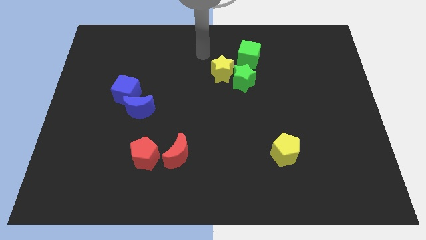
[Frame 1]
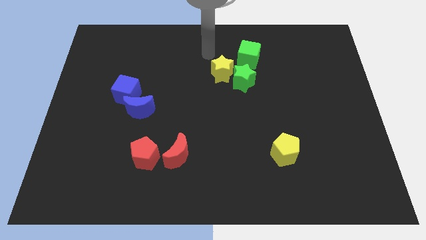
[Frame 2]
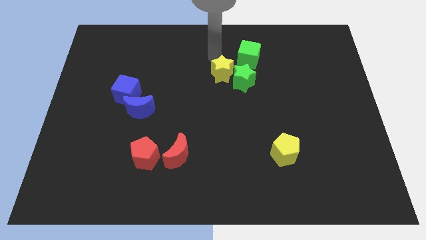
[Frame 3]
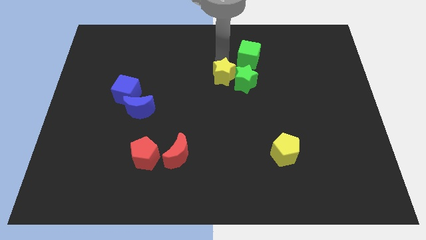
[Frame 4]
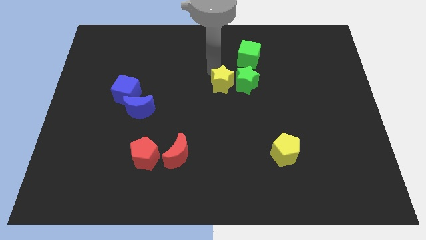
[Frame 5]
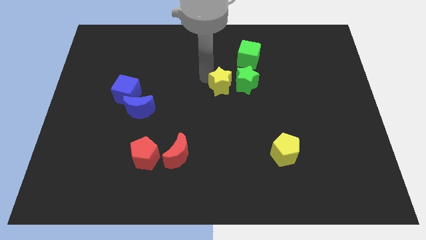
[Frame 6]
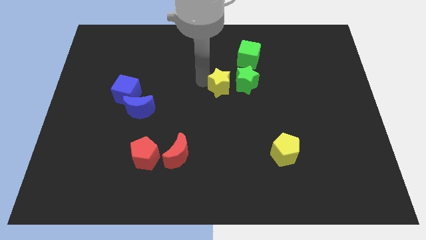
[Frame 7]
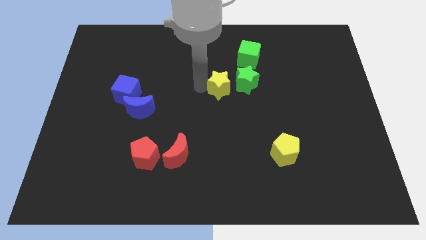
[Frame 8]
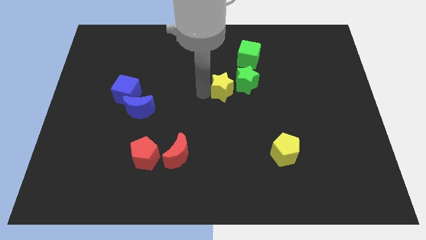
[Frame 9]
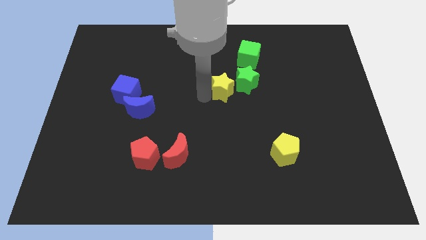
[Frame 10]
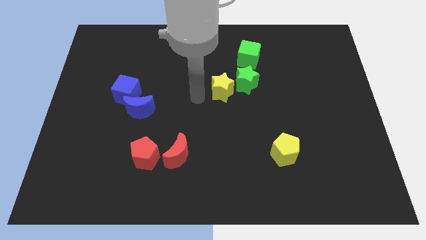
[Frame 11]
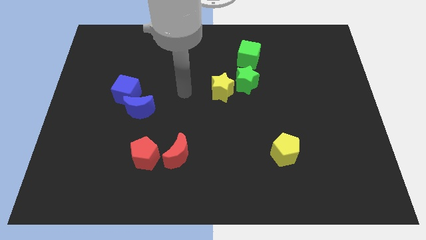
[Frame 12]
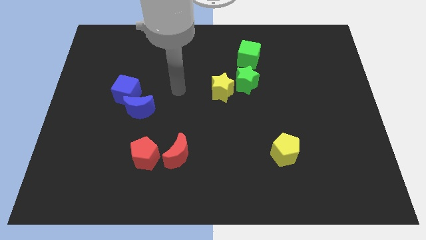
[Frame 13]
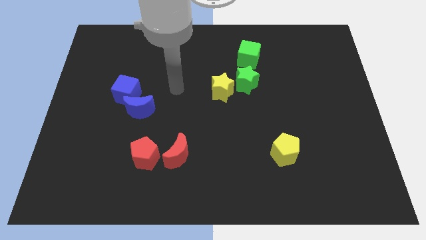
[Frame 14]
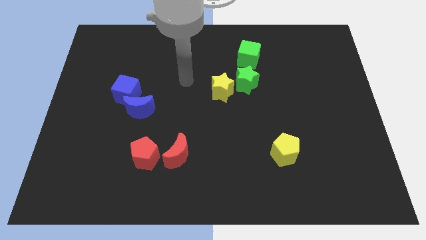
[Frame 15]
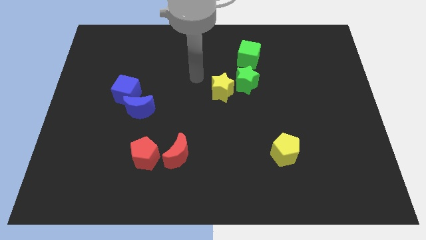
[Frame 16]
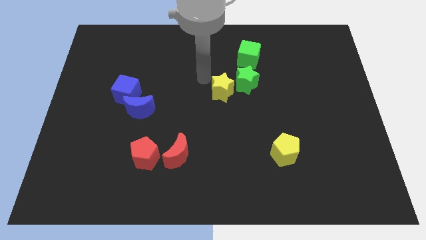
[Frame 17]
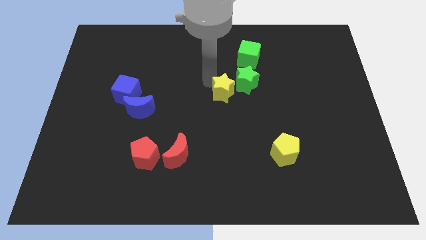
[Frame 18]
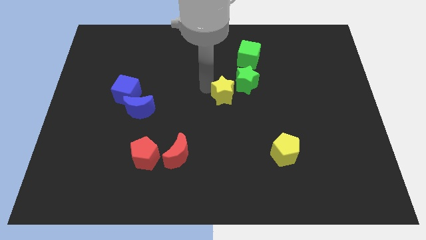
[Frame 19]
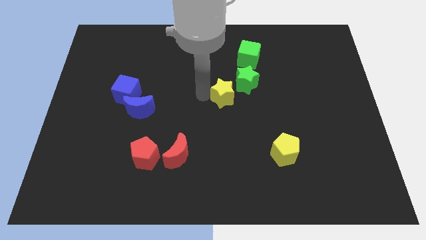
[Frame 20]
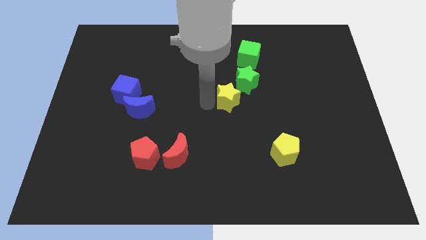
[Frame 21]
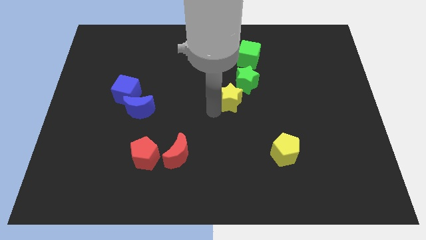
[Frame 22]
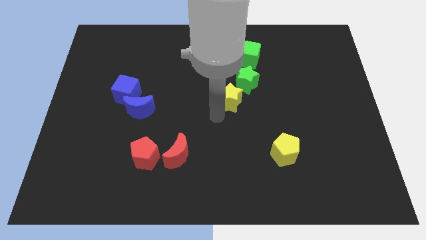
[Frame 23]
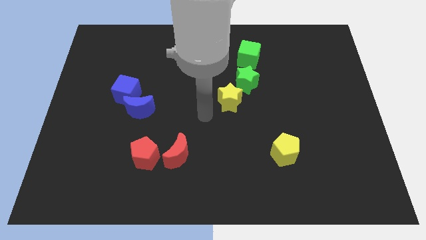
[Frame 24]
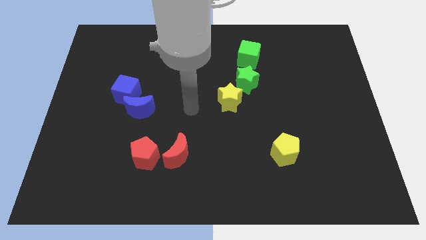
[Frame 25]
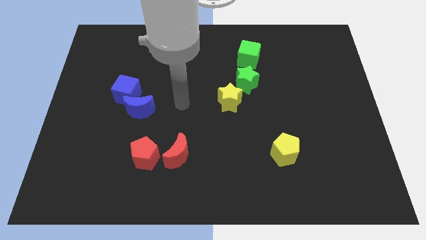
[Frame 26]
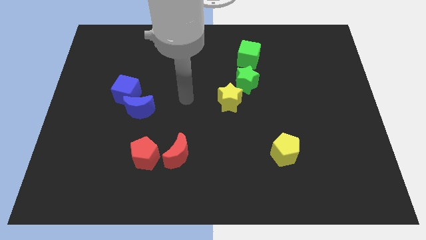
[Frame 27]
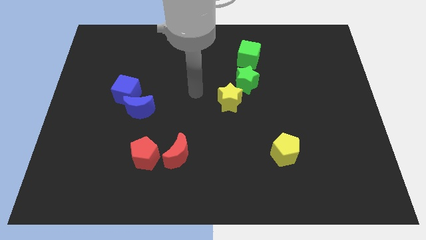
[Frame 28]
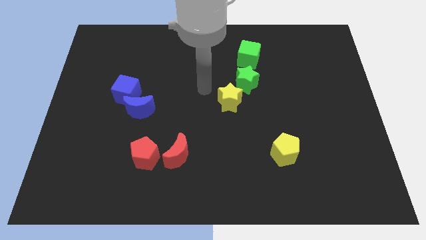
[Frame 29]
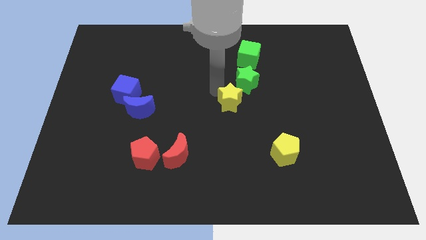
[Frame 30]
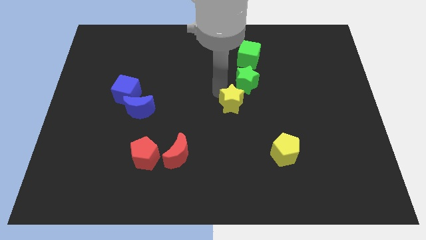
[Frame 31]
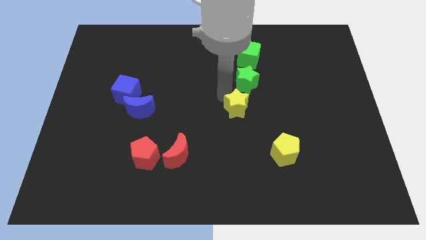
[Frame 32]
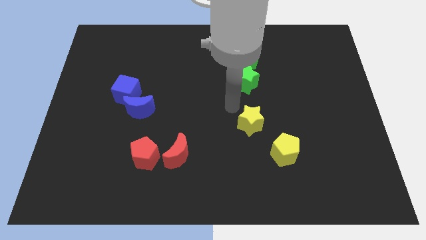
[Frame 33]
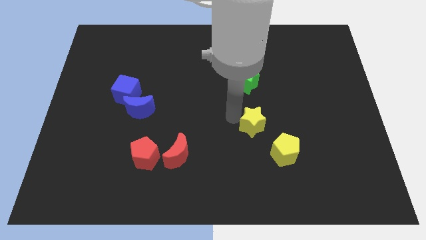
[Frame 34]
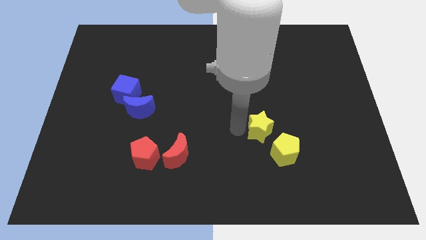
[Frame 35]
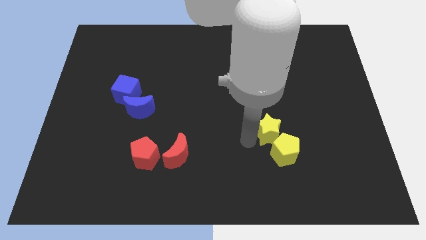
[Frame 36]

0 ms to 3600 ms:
place yellow star at the top left side of yellow pentagon

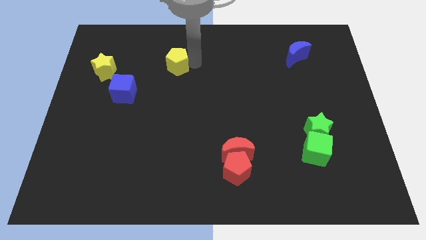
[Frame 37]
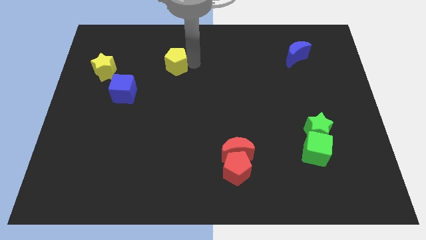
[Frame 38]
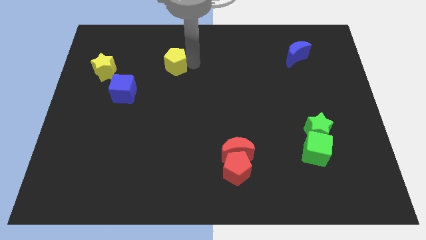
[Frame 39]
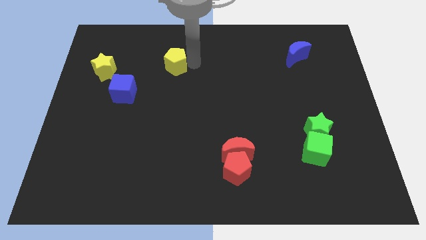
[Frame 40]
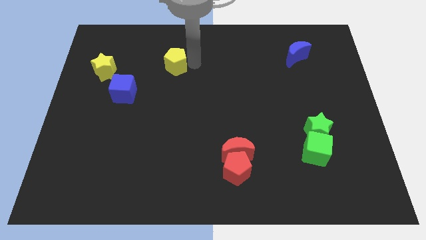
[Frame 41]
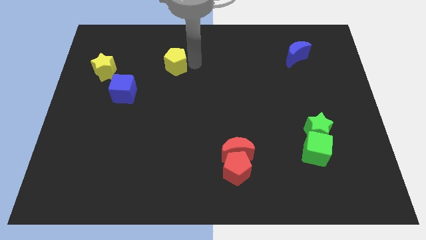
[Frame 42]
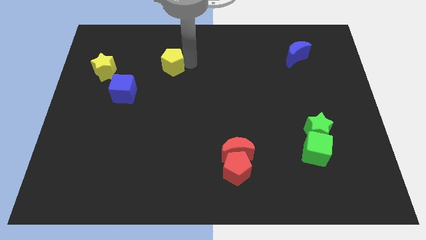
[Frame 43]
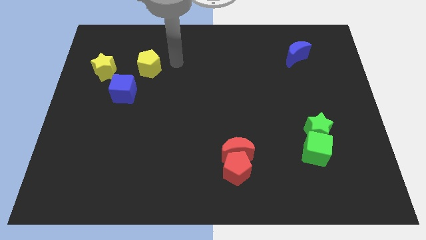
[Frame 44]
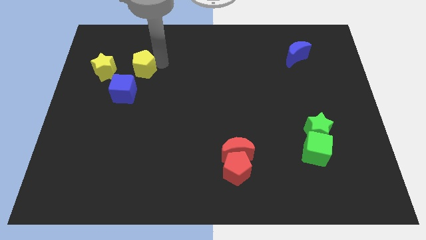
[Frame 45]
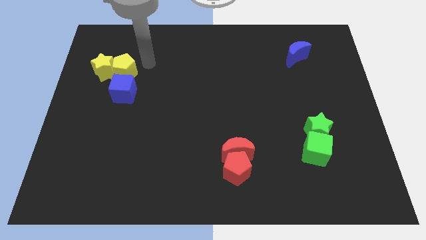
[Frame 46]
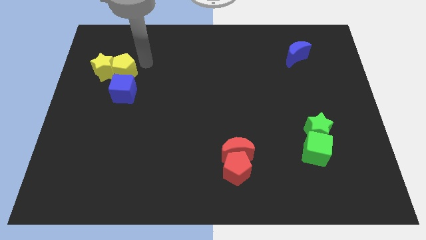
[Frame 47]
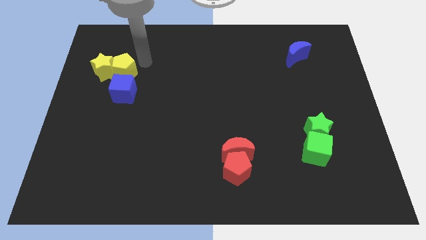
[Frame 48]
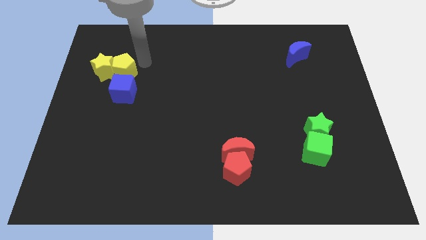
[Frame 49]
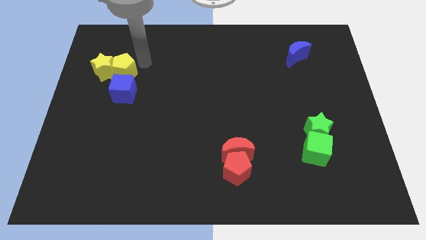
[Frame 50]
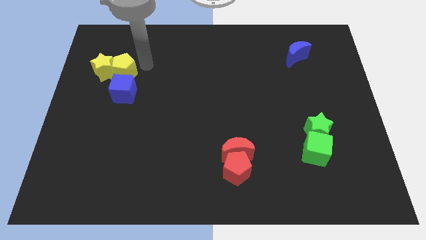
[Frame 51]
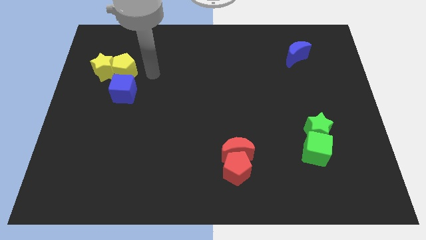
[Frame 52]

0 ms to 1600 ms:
place yellow pentagon near yellow star

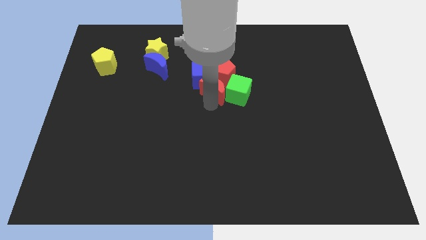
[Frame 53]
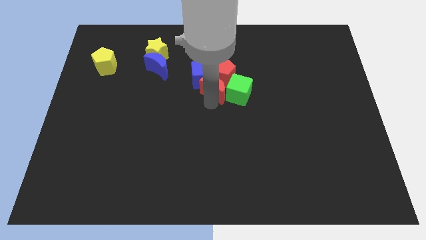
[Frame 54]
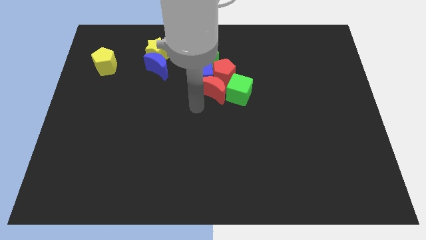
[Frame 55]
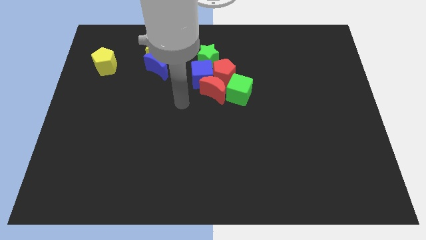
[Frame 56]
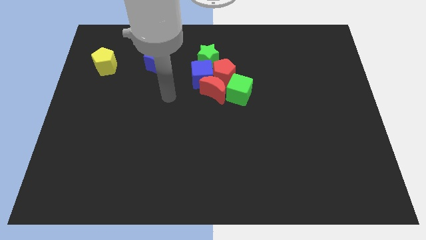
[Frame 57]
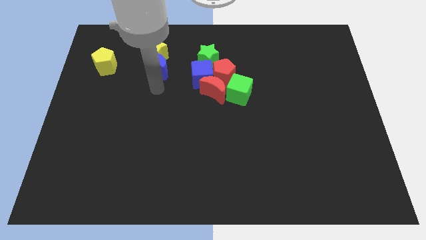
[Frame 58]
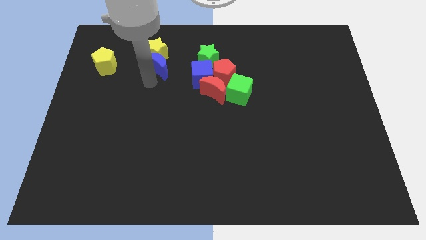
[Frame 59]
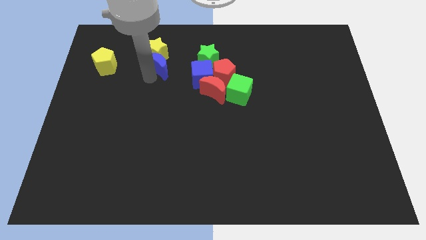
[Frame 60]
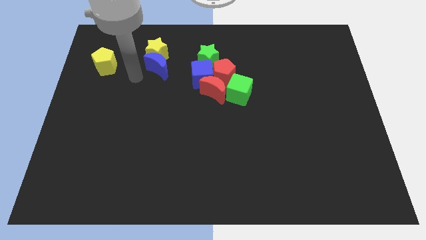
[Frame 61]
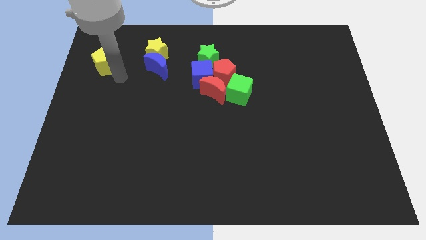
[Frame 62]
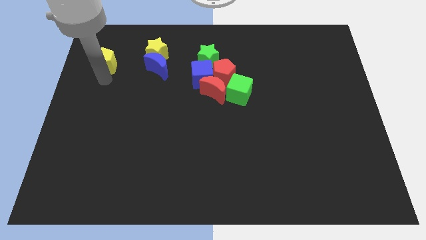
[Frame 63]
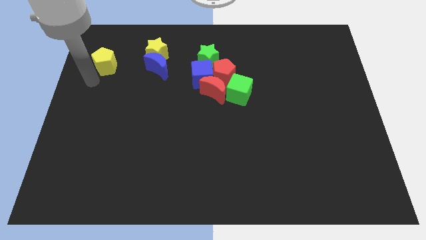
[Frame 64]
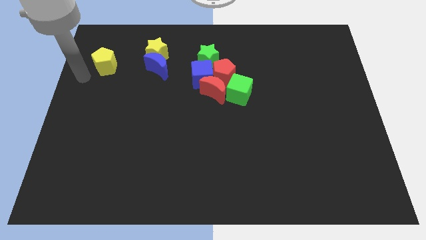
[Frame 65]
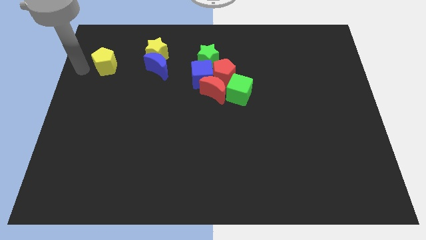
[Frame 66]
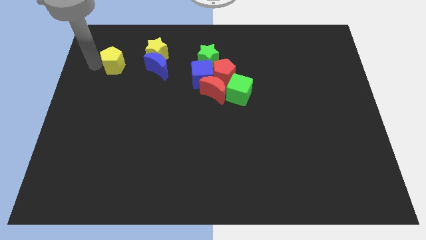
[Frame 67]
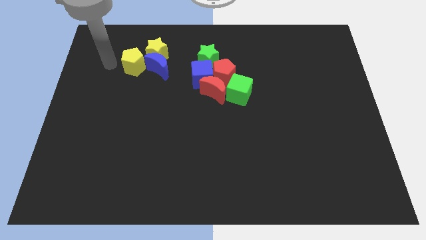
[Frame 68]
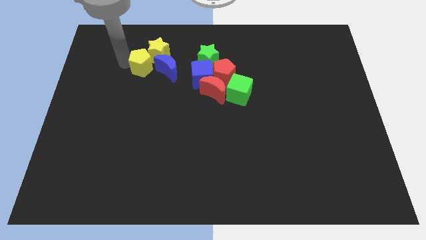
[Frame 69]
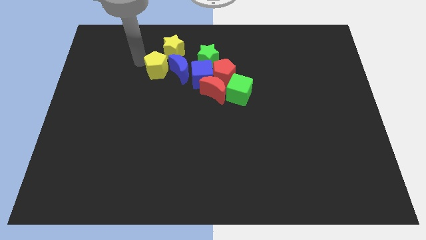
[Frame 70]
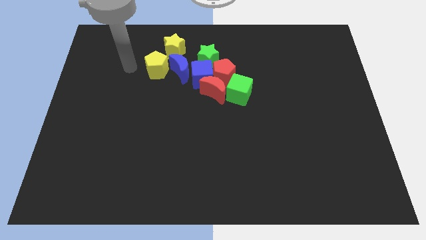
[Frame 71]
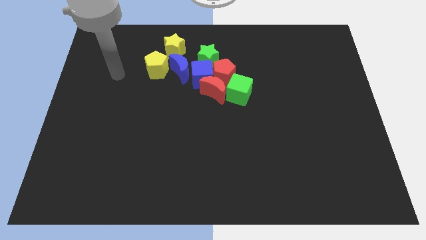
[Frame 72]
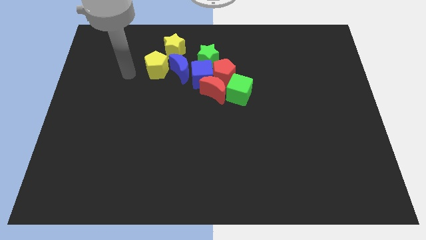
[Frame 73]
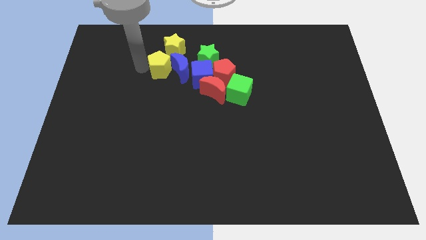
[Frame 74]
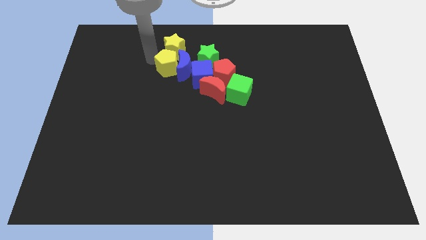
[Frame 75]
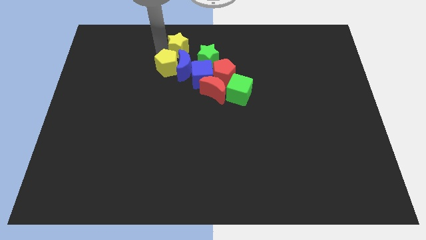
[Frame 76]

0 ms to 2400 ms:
move the yellow pentagon into the blue moon and yellow star

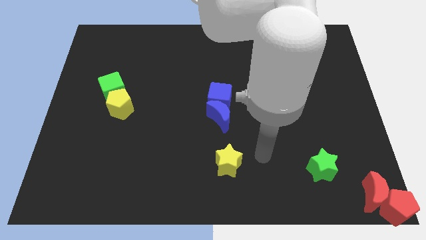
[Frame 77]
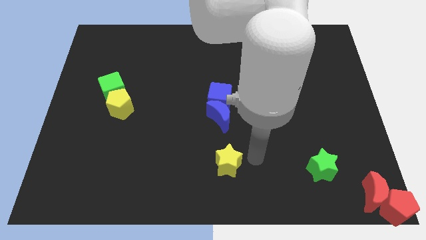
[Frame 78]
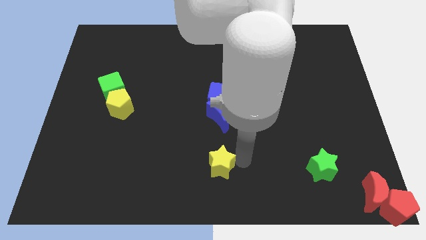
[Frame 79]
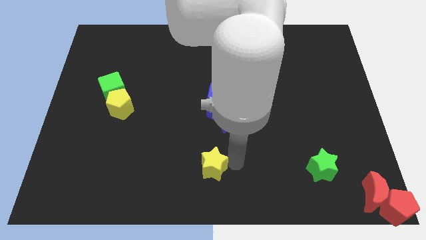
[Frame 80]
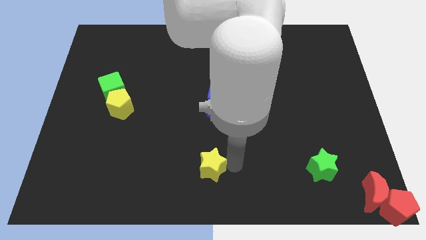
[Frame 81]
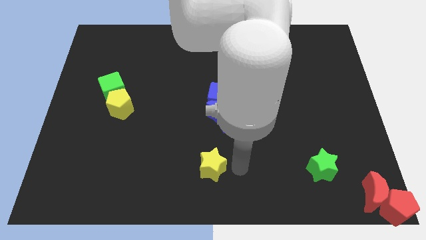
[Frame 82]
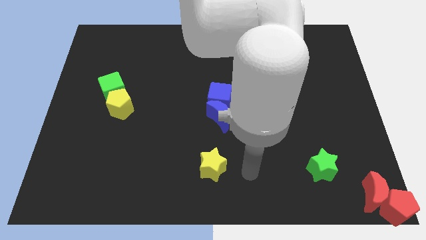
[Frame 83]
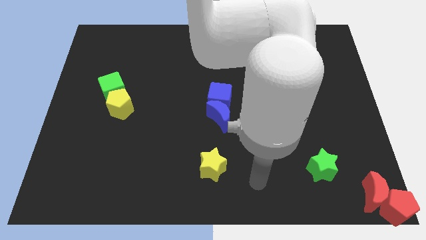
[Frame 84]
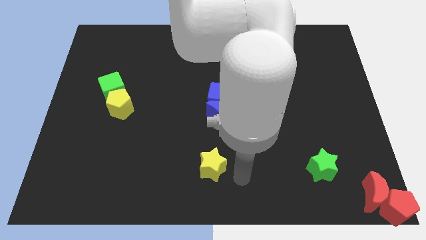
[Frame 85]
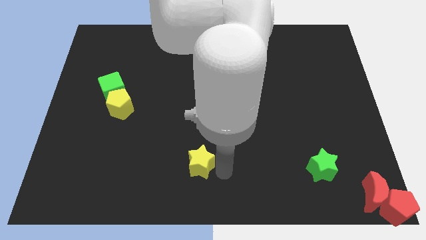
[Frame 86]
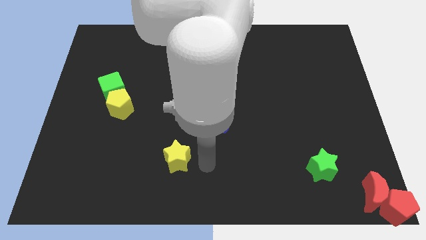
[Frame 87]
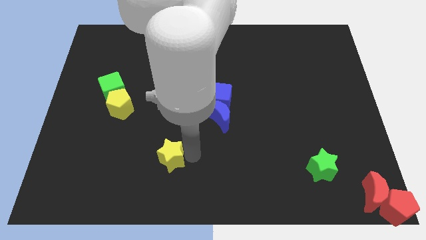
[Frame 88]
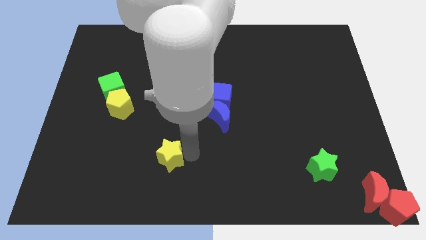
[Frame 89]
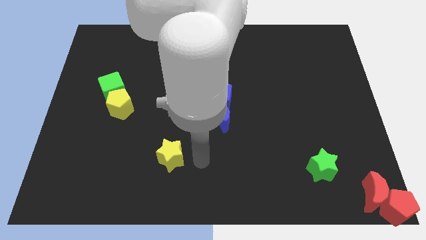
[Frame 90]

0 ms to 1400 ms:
push the yellow star towards the left side of the board
